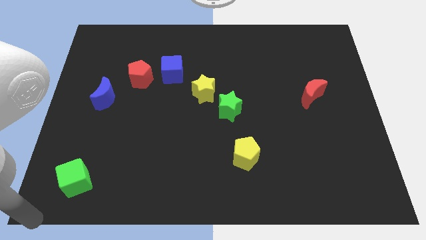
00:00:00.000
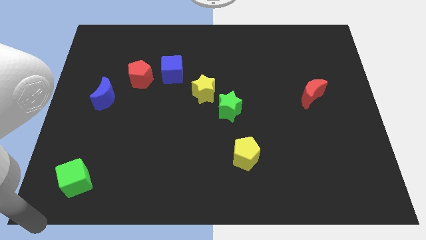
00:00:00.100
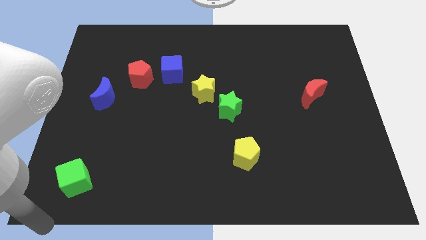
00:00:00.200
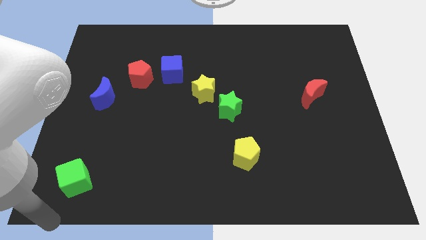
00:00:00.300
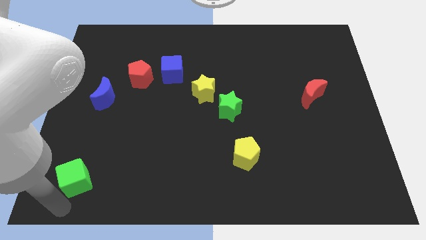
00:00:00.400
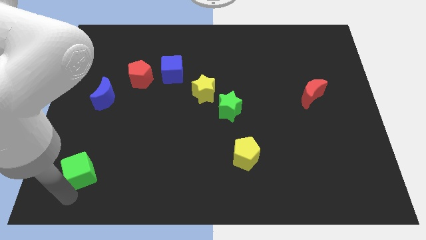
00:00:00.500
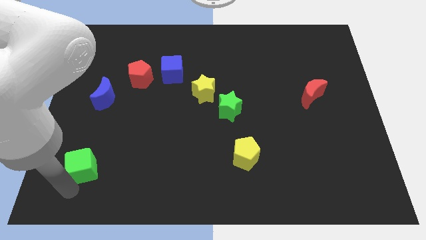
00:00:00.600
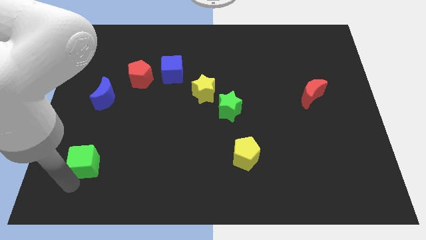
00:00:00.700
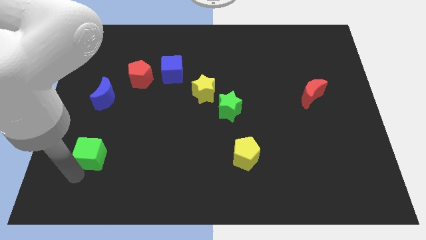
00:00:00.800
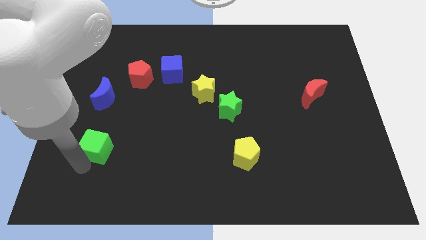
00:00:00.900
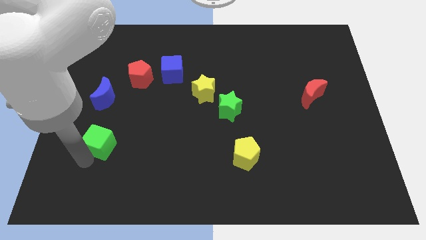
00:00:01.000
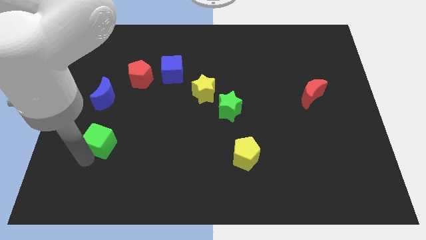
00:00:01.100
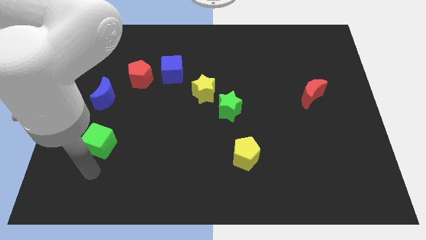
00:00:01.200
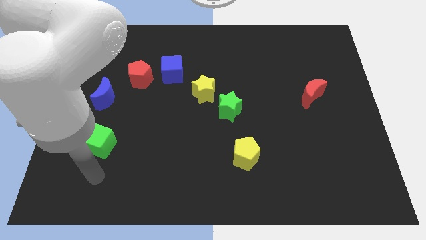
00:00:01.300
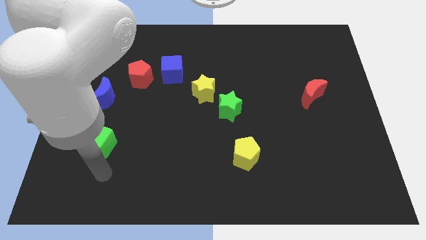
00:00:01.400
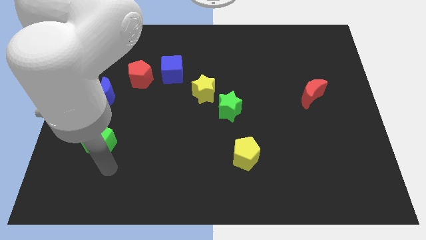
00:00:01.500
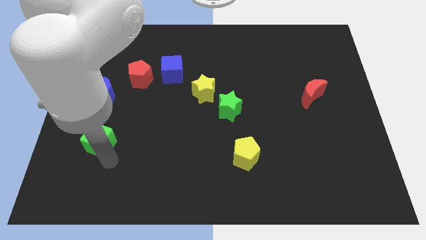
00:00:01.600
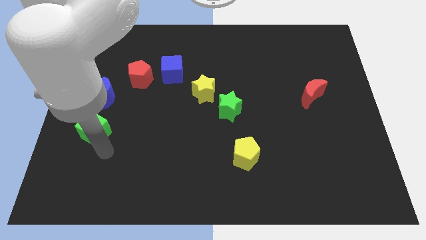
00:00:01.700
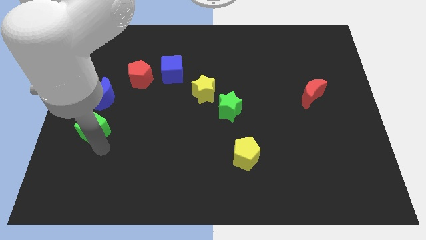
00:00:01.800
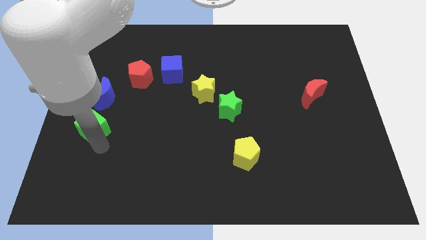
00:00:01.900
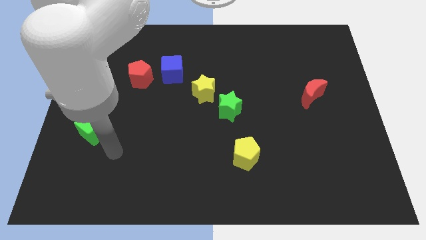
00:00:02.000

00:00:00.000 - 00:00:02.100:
push the green cube below the blue crescent

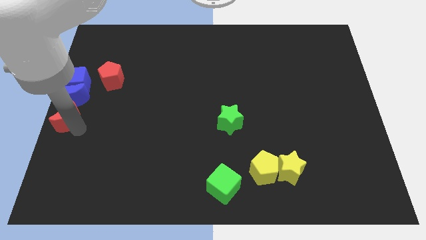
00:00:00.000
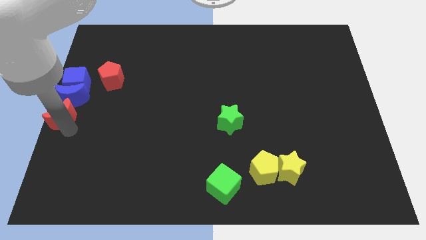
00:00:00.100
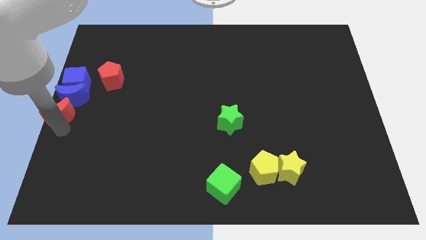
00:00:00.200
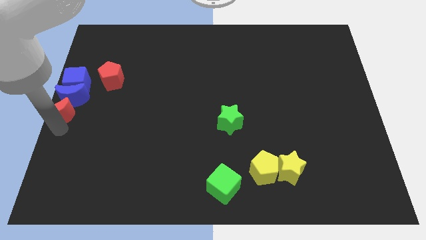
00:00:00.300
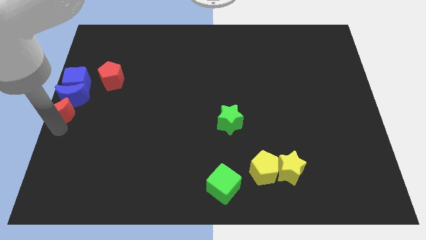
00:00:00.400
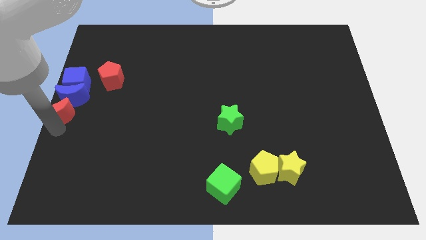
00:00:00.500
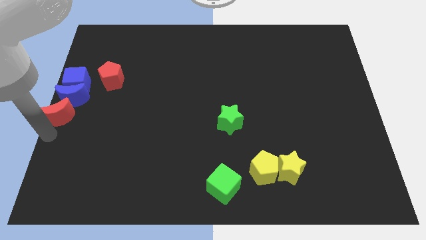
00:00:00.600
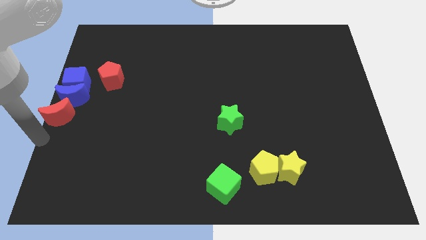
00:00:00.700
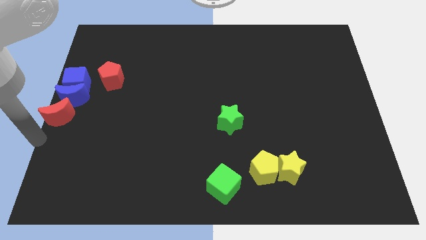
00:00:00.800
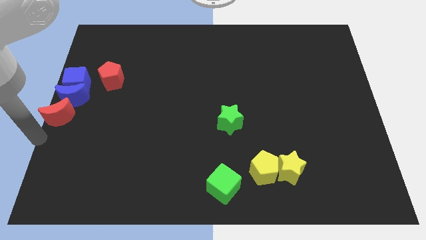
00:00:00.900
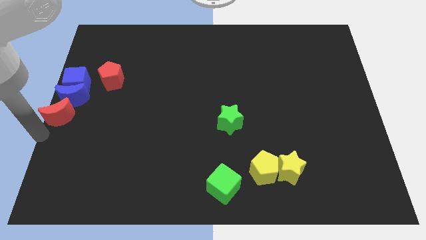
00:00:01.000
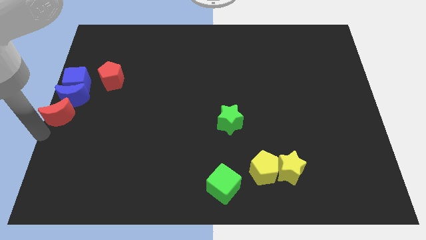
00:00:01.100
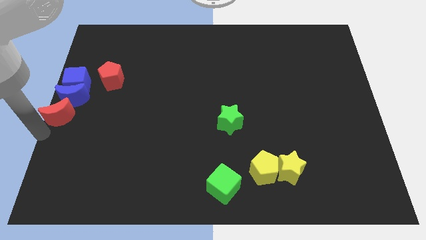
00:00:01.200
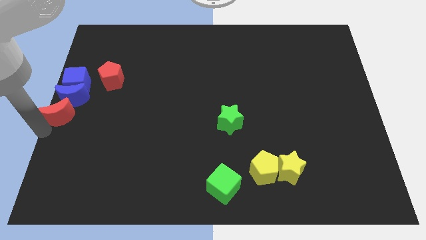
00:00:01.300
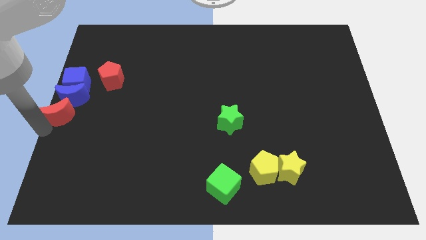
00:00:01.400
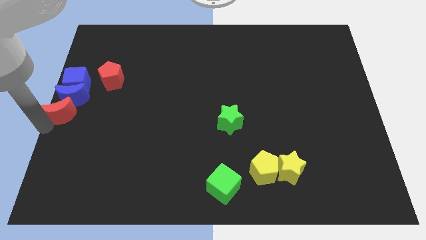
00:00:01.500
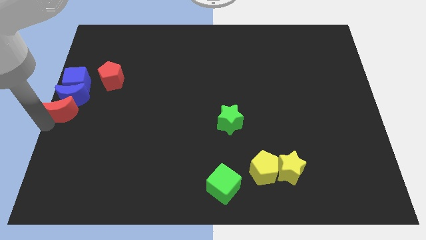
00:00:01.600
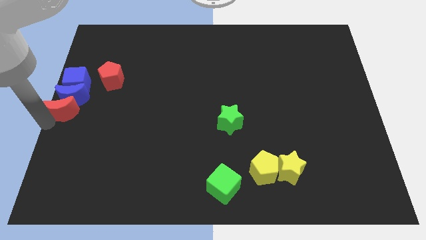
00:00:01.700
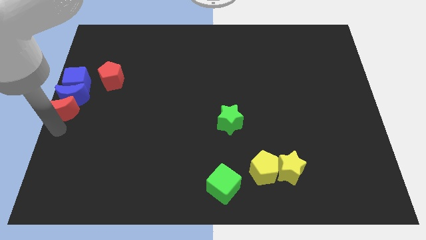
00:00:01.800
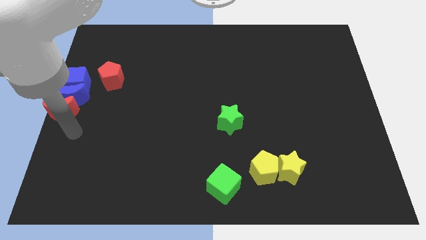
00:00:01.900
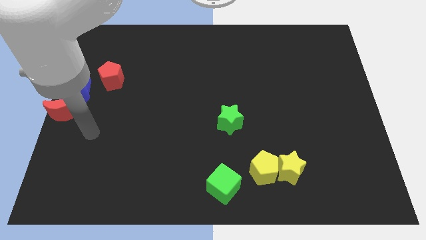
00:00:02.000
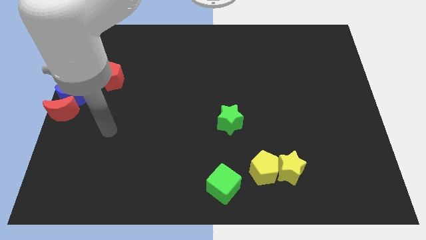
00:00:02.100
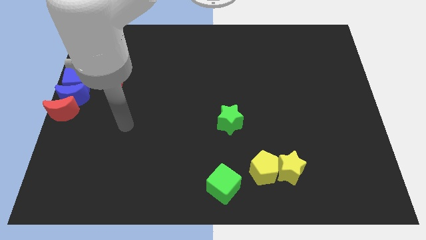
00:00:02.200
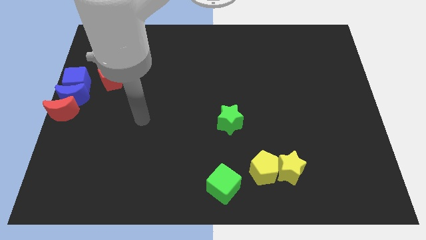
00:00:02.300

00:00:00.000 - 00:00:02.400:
tap at the bottom of the red moon

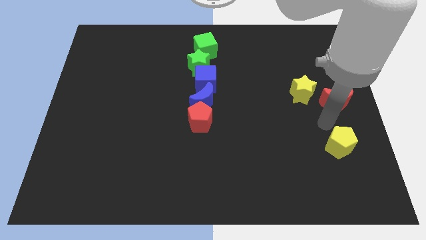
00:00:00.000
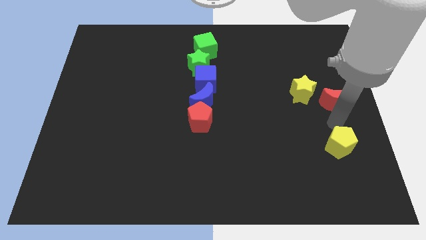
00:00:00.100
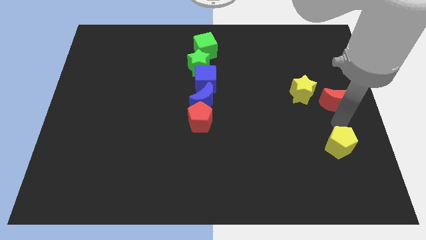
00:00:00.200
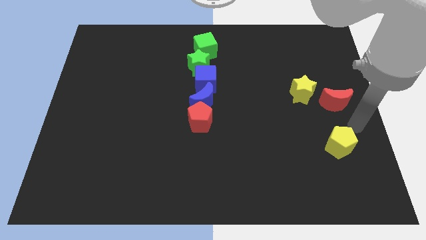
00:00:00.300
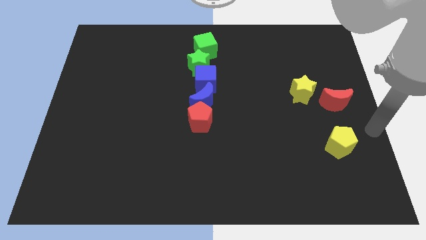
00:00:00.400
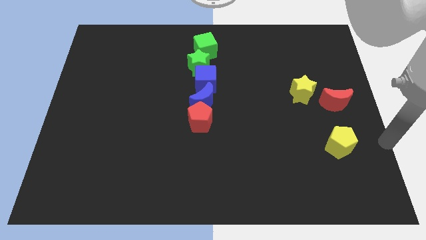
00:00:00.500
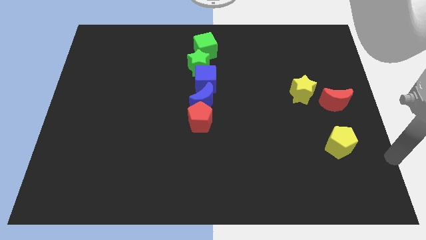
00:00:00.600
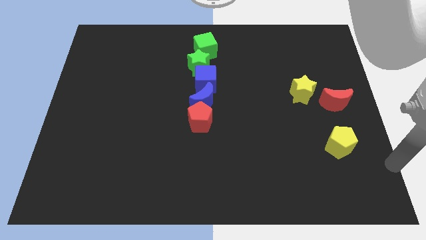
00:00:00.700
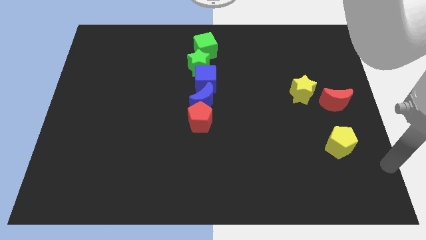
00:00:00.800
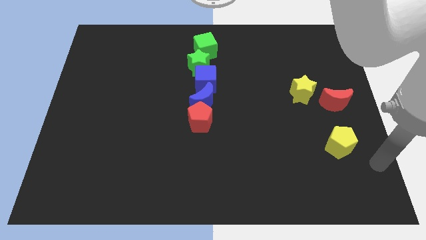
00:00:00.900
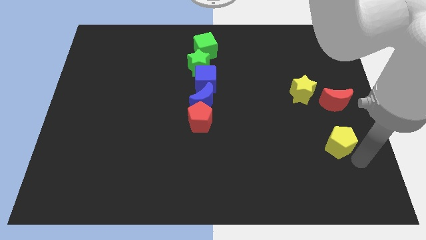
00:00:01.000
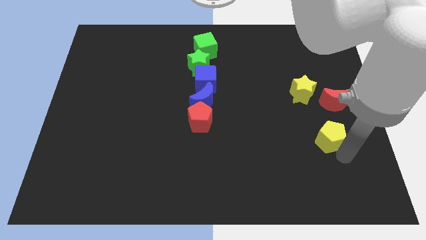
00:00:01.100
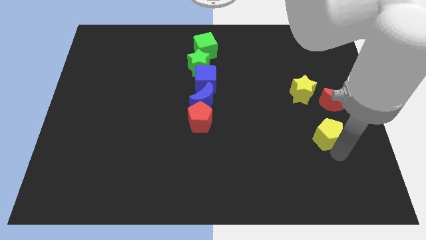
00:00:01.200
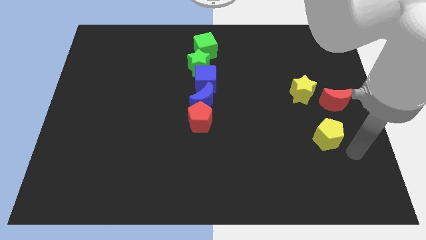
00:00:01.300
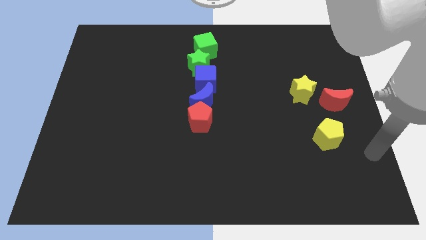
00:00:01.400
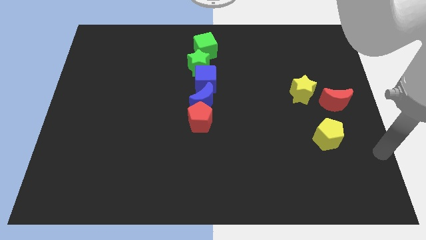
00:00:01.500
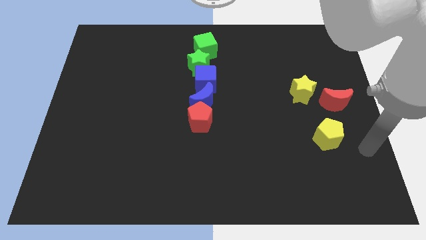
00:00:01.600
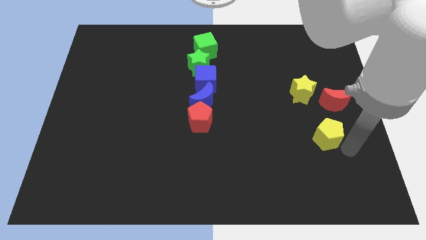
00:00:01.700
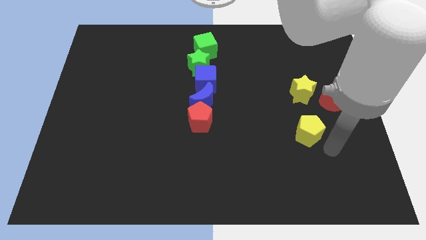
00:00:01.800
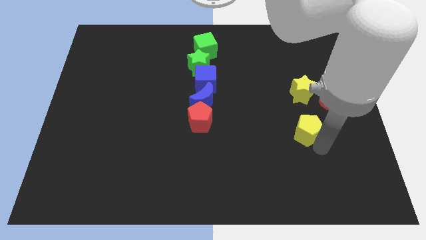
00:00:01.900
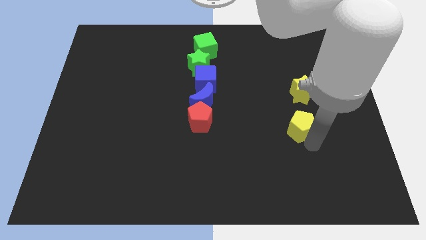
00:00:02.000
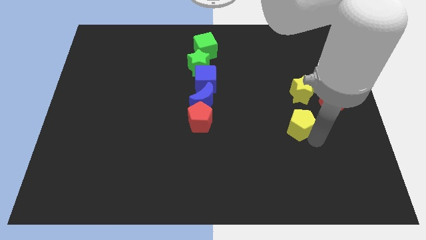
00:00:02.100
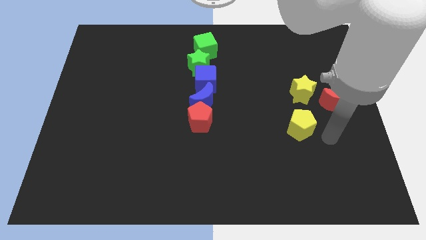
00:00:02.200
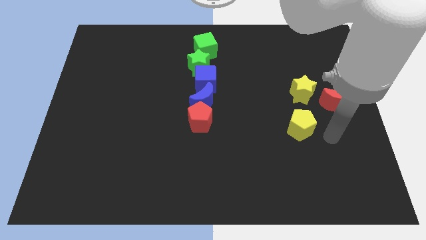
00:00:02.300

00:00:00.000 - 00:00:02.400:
place the yellow pentagon below the yellow star

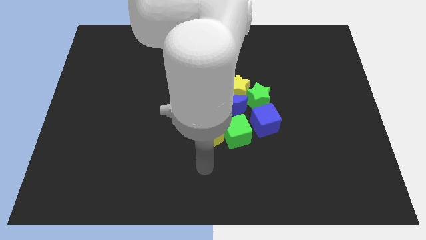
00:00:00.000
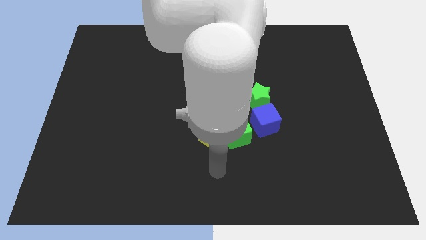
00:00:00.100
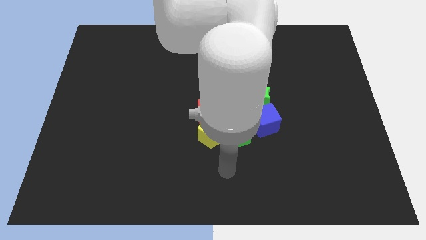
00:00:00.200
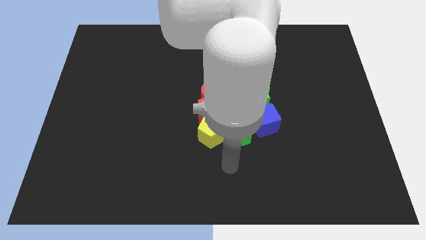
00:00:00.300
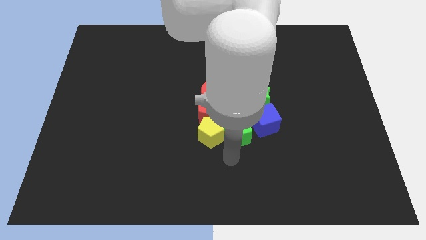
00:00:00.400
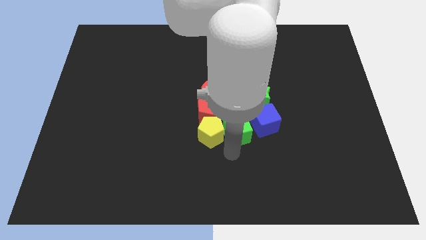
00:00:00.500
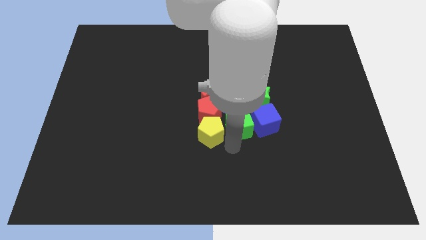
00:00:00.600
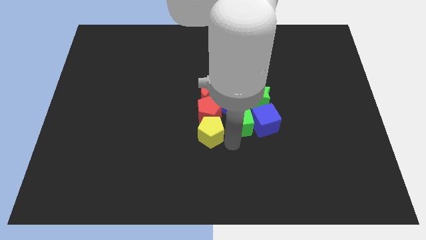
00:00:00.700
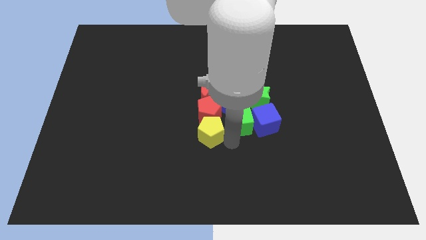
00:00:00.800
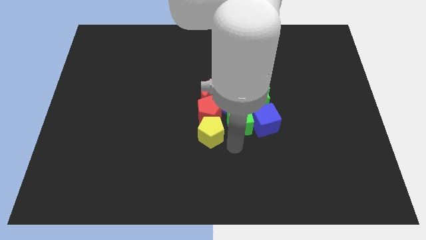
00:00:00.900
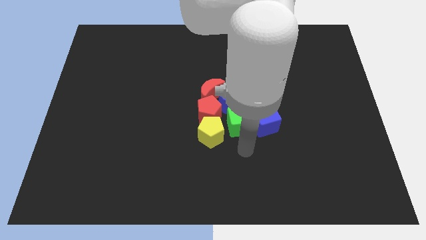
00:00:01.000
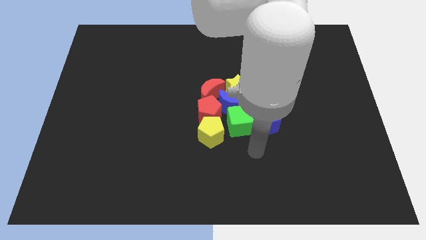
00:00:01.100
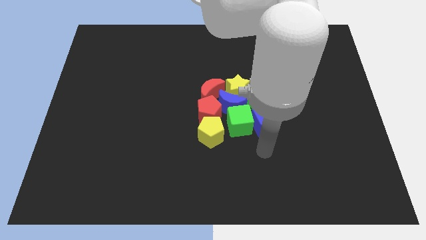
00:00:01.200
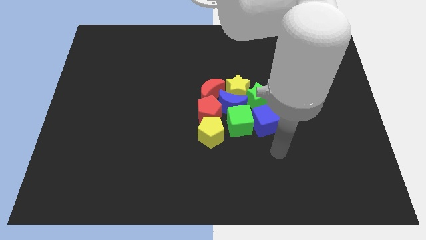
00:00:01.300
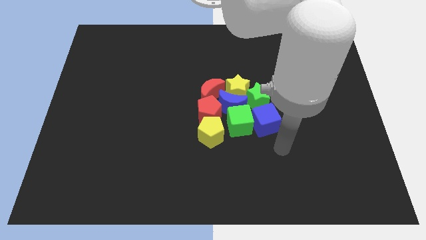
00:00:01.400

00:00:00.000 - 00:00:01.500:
slightly push the green cube upwards

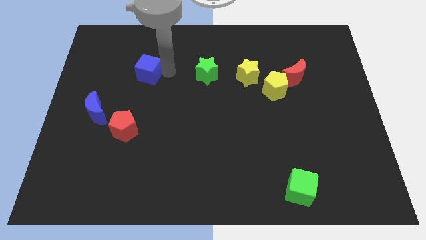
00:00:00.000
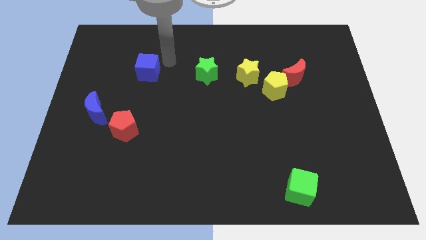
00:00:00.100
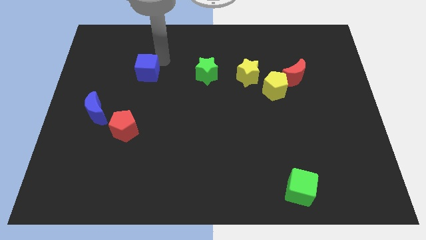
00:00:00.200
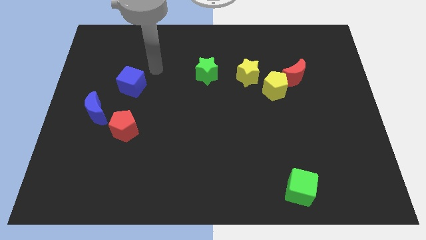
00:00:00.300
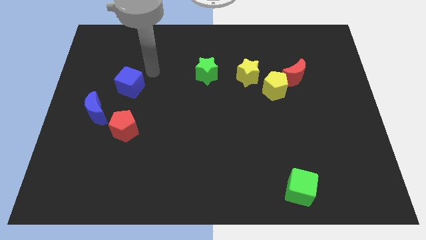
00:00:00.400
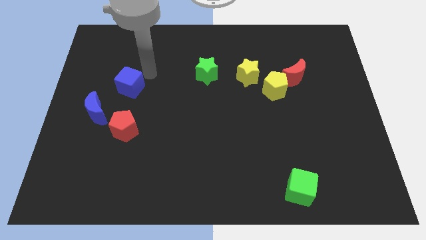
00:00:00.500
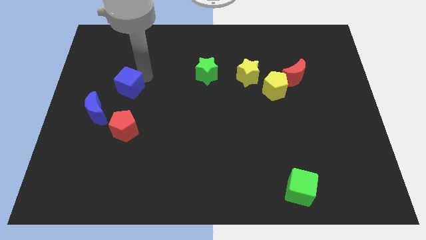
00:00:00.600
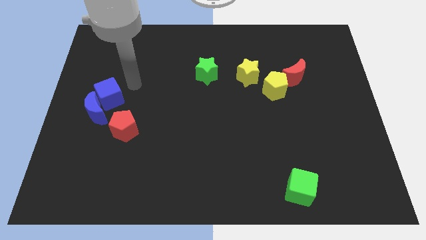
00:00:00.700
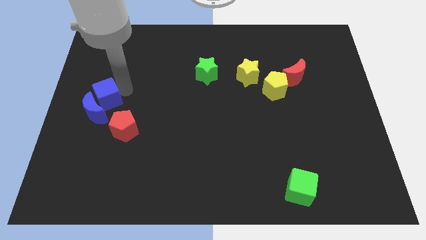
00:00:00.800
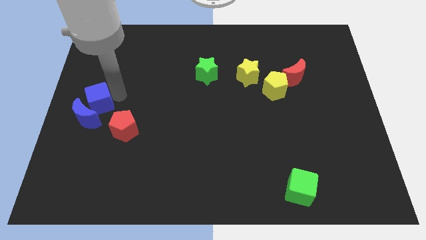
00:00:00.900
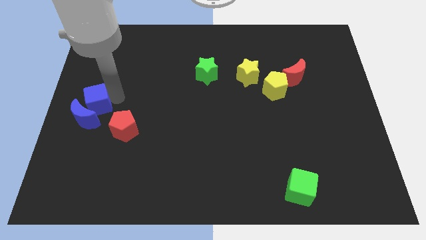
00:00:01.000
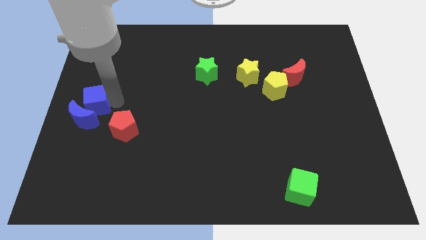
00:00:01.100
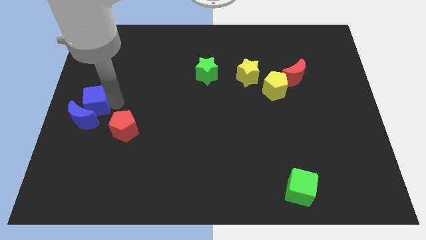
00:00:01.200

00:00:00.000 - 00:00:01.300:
move the blue cube into the blue moon
